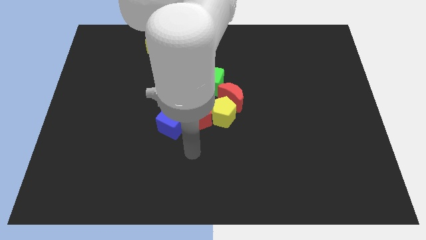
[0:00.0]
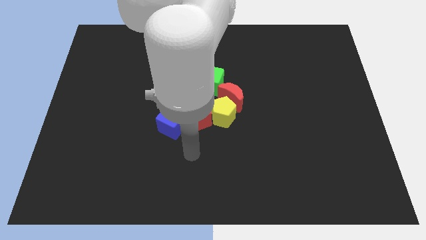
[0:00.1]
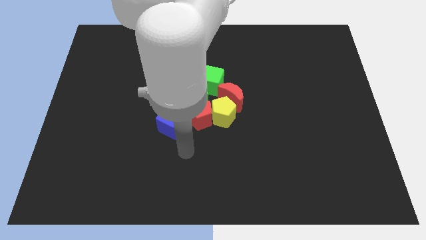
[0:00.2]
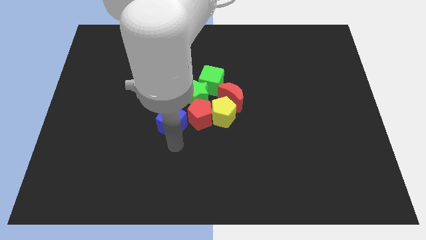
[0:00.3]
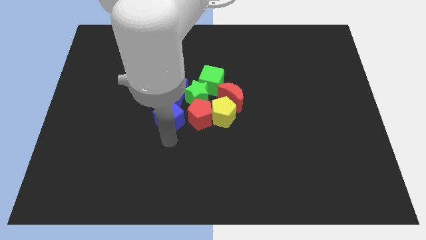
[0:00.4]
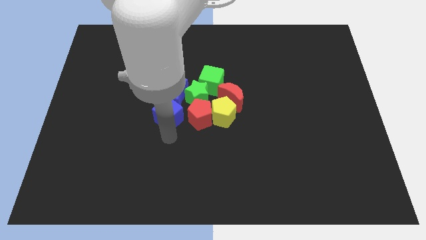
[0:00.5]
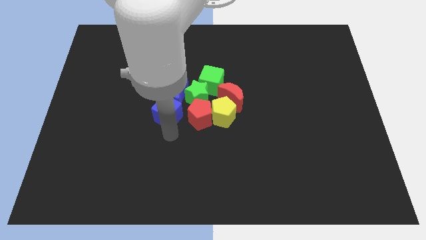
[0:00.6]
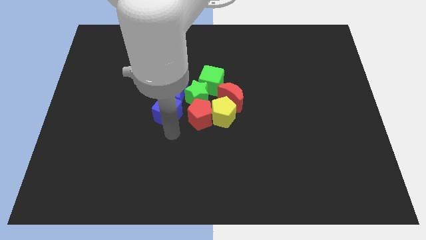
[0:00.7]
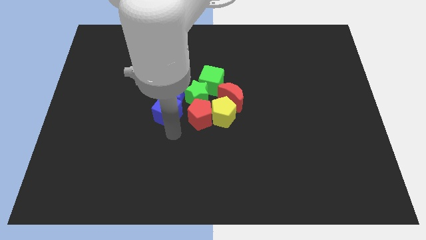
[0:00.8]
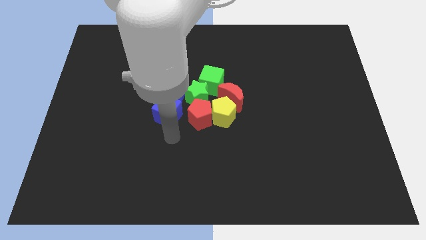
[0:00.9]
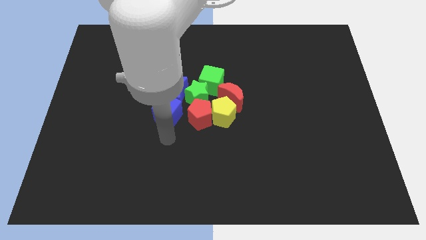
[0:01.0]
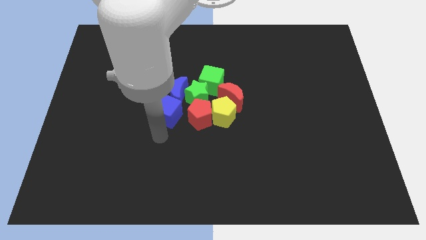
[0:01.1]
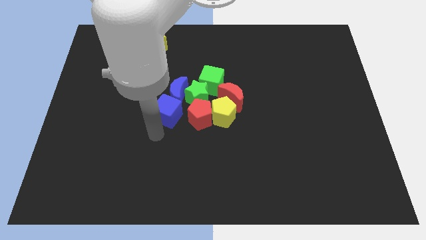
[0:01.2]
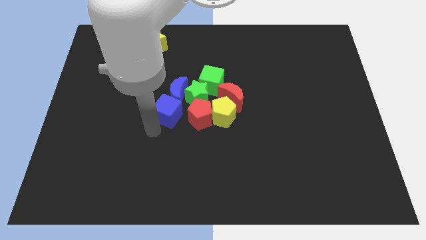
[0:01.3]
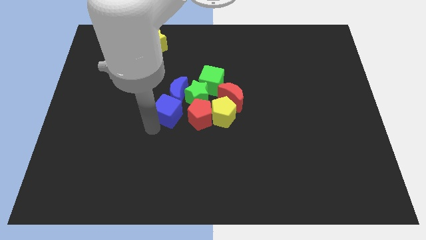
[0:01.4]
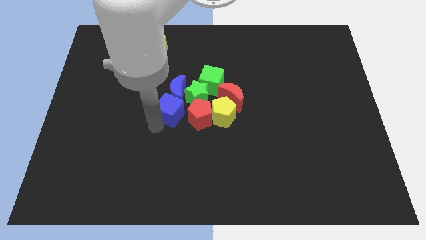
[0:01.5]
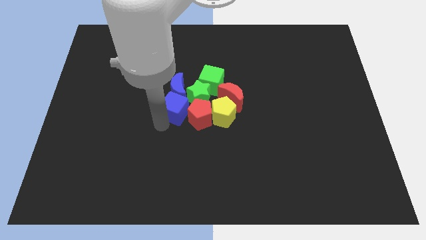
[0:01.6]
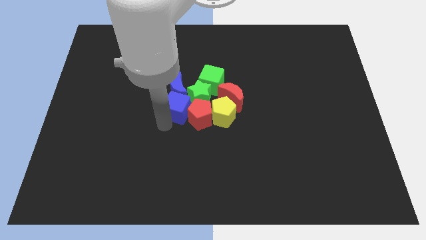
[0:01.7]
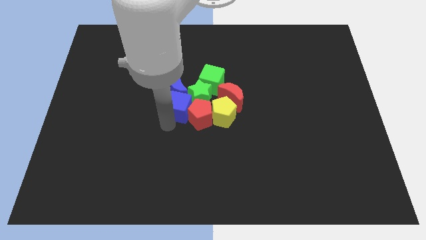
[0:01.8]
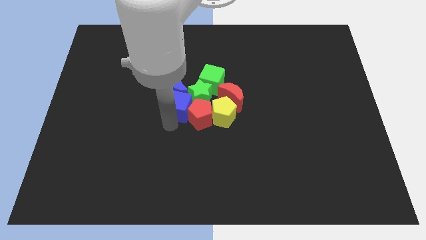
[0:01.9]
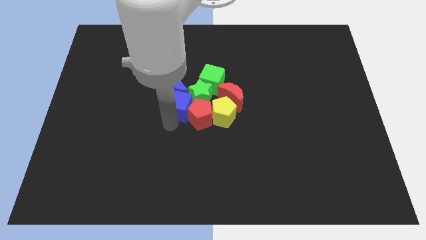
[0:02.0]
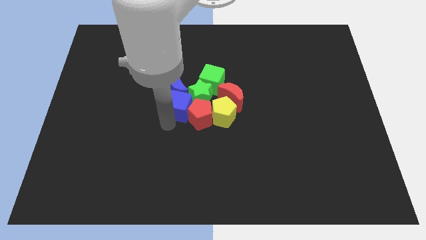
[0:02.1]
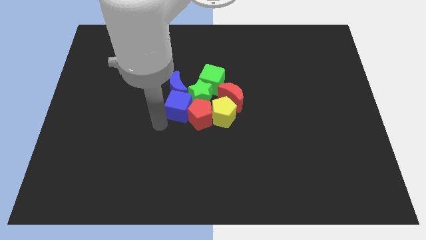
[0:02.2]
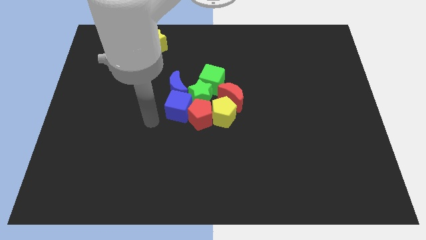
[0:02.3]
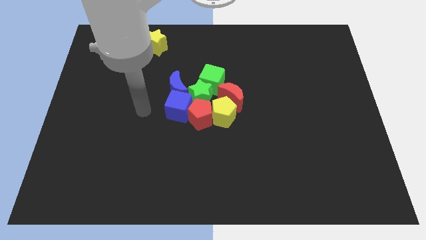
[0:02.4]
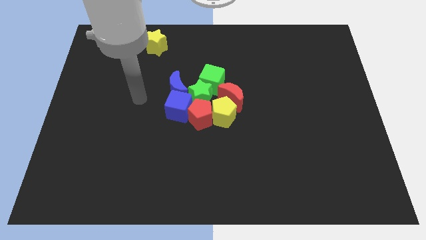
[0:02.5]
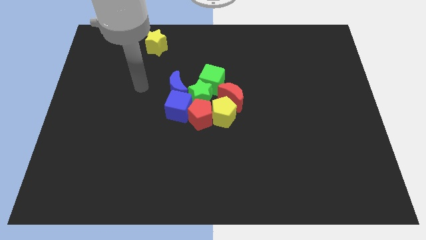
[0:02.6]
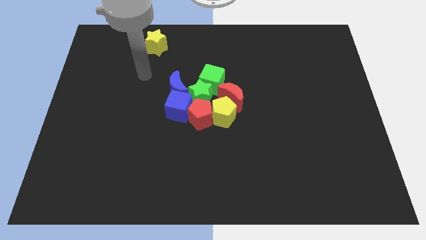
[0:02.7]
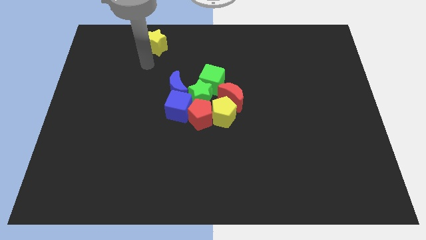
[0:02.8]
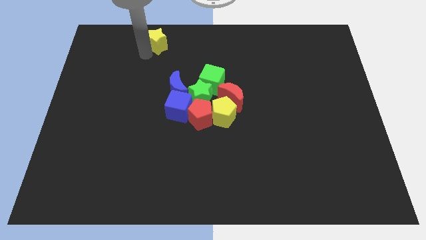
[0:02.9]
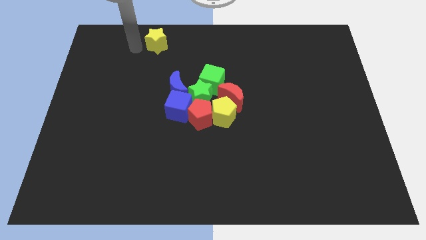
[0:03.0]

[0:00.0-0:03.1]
move the blue cube below the blue moon

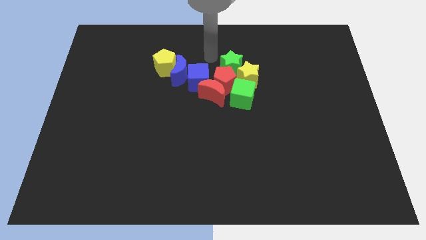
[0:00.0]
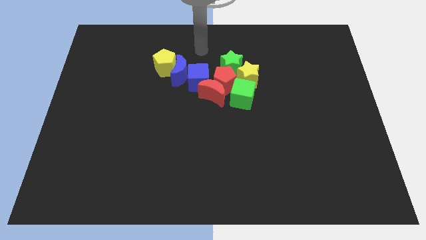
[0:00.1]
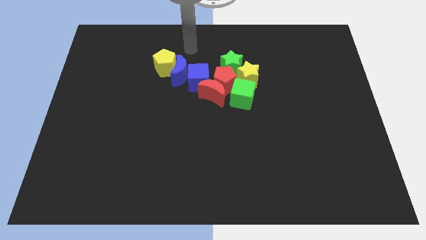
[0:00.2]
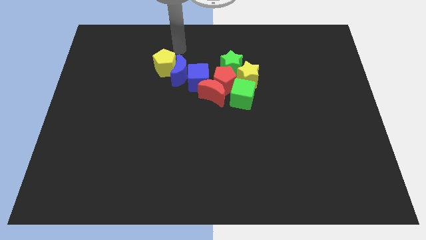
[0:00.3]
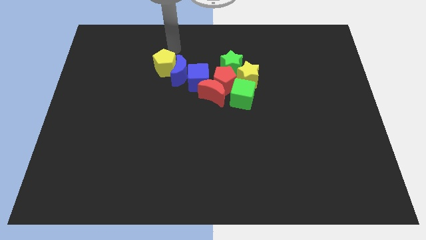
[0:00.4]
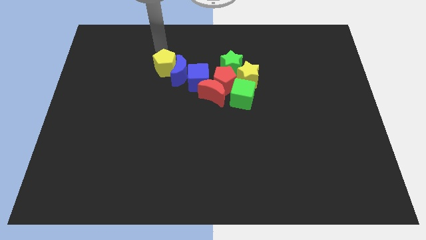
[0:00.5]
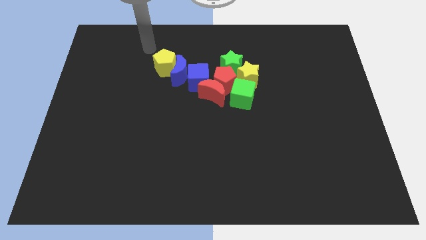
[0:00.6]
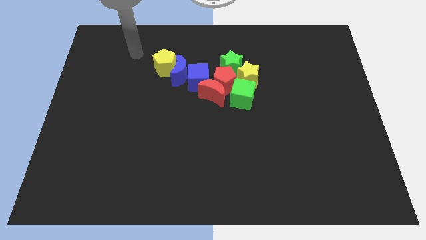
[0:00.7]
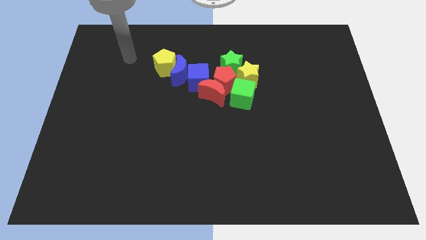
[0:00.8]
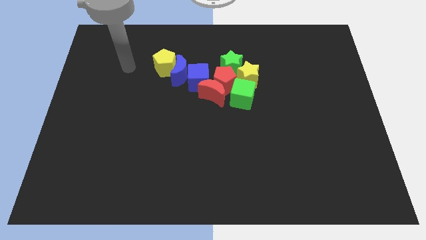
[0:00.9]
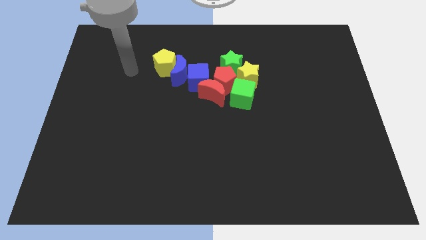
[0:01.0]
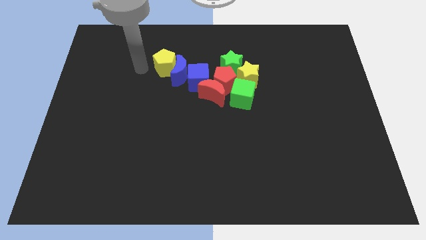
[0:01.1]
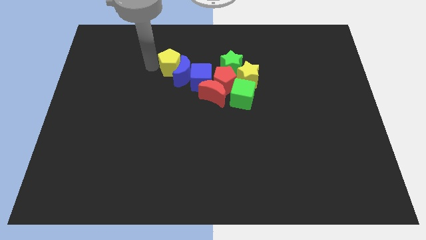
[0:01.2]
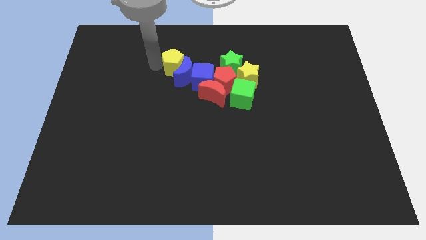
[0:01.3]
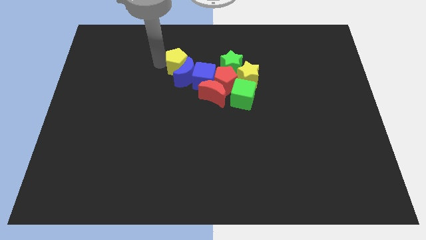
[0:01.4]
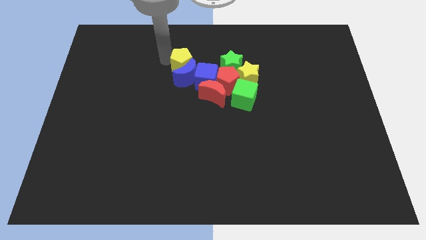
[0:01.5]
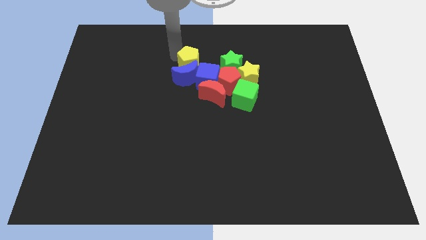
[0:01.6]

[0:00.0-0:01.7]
slightly push the yellow pentagon into blue moon

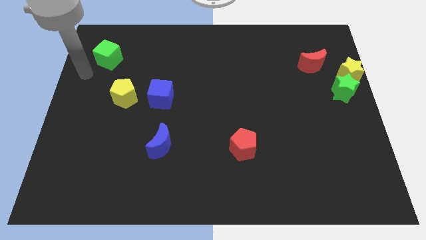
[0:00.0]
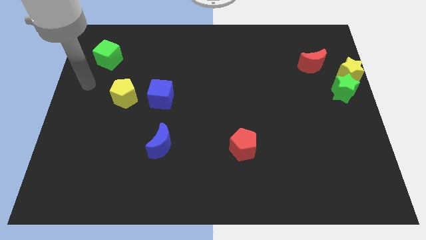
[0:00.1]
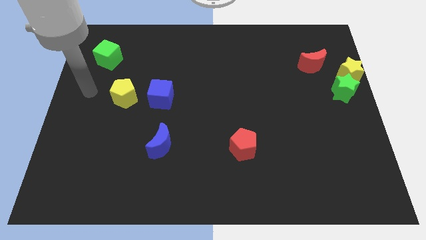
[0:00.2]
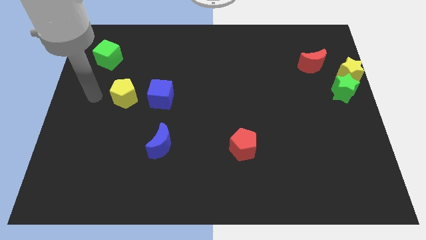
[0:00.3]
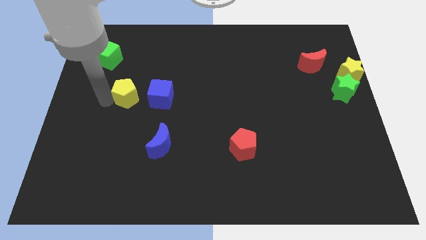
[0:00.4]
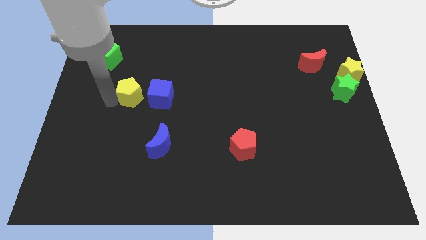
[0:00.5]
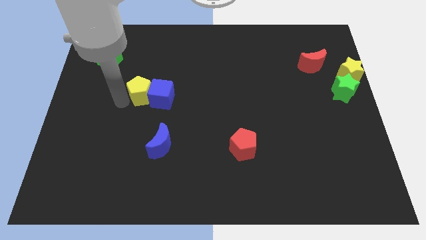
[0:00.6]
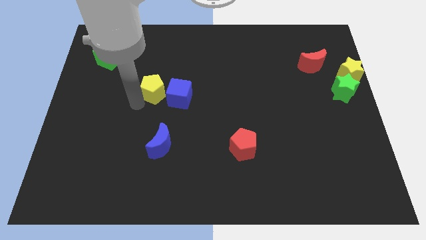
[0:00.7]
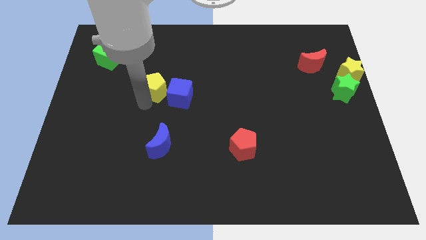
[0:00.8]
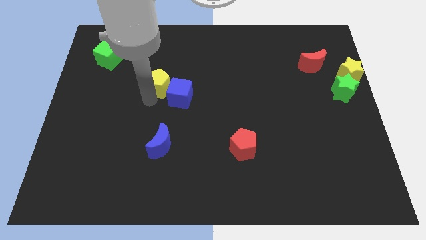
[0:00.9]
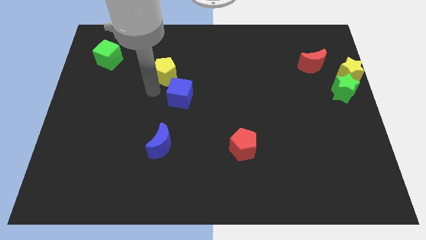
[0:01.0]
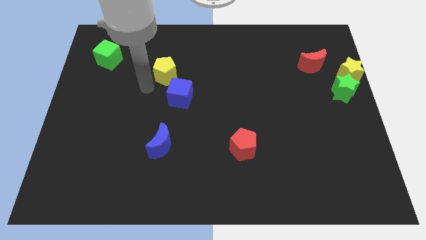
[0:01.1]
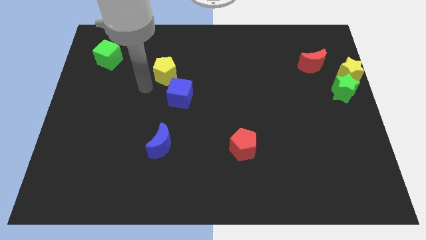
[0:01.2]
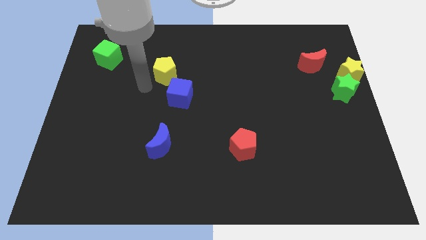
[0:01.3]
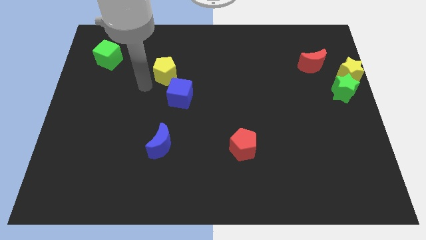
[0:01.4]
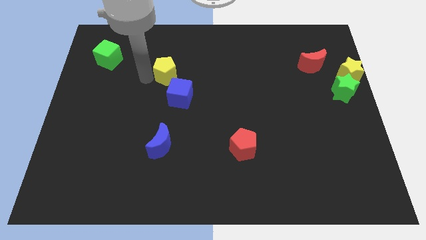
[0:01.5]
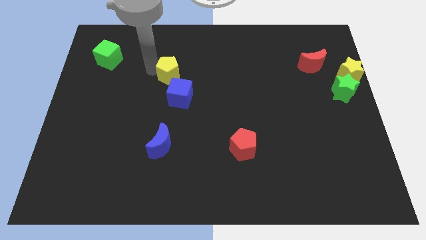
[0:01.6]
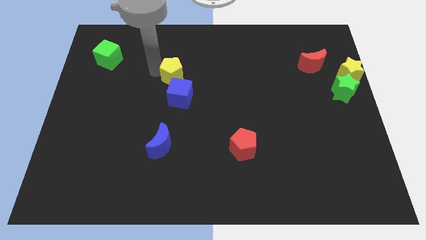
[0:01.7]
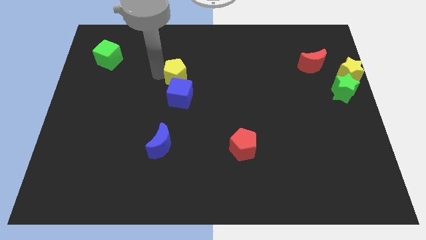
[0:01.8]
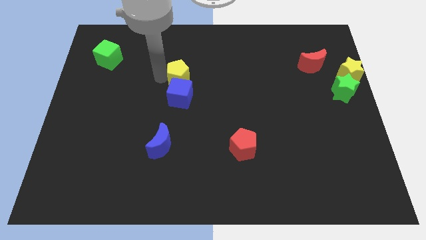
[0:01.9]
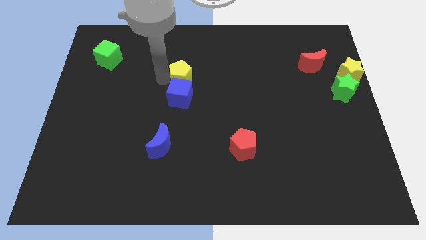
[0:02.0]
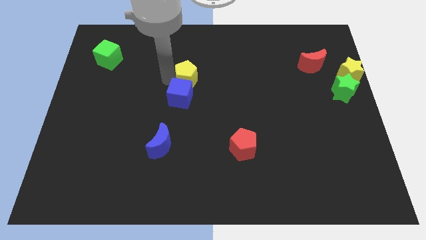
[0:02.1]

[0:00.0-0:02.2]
slide yellow pentagon into blue cube

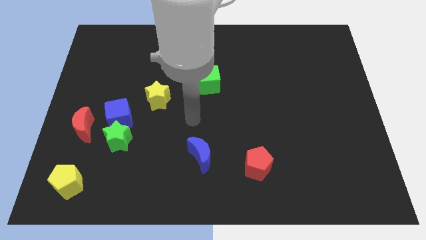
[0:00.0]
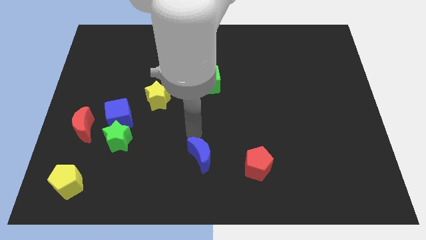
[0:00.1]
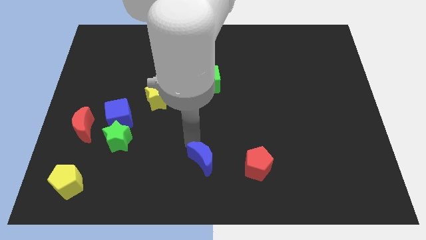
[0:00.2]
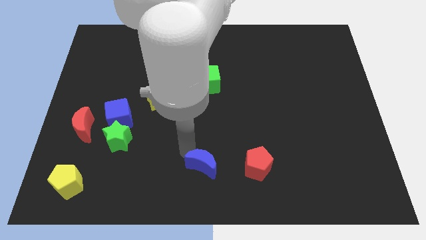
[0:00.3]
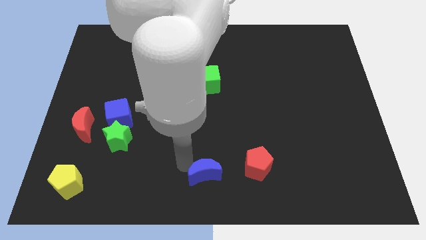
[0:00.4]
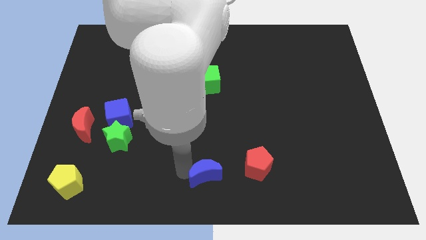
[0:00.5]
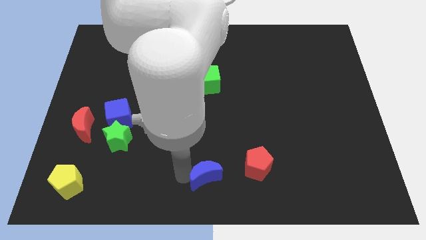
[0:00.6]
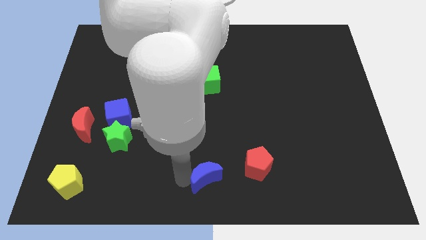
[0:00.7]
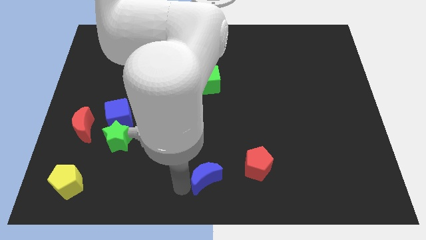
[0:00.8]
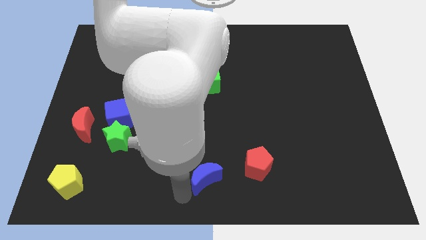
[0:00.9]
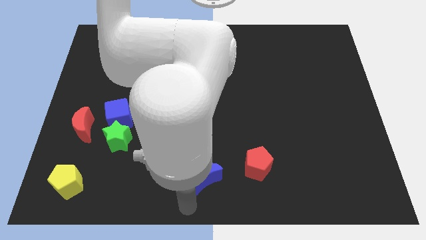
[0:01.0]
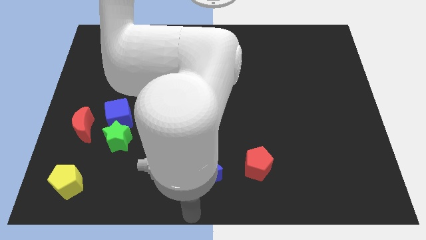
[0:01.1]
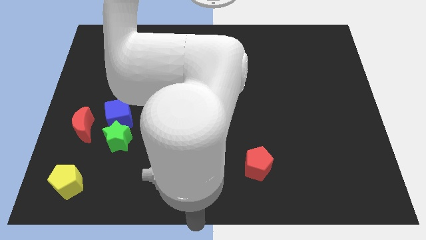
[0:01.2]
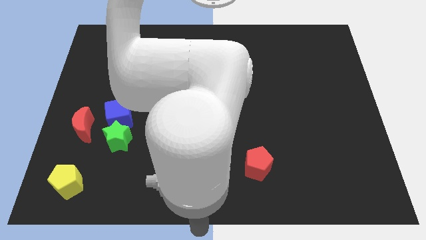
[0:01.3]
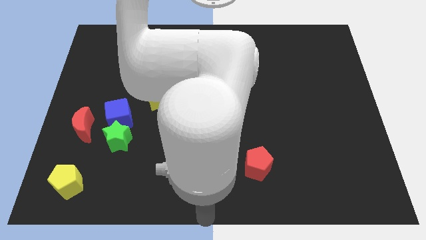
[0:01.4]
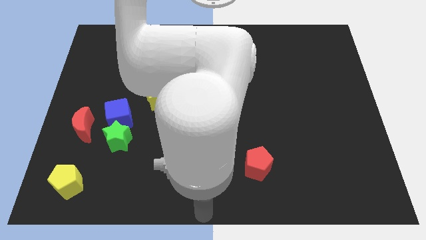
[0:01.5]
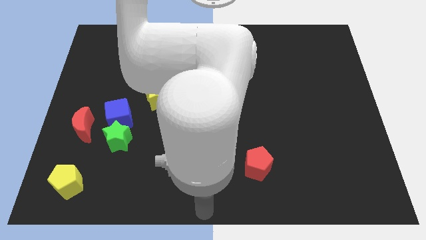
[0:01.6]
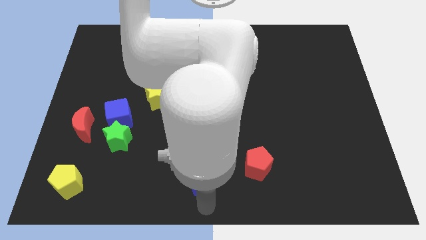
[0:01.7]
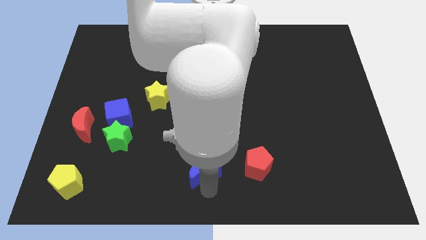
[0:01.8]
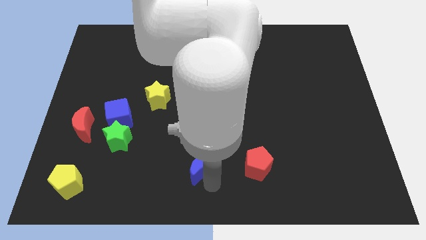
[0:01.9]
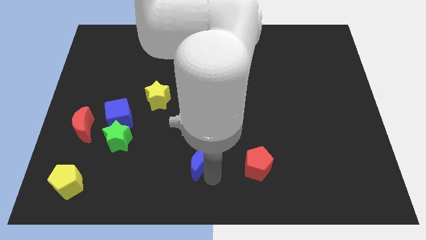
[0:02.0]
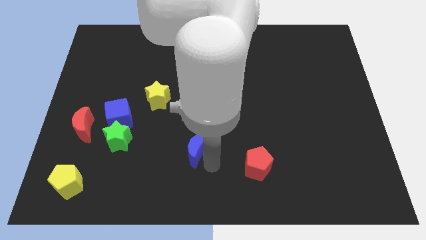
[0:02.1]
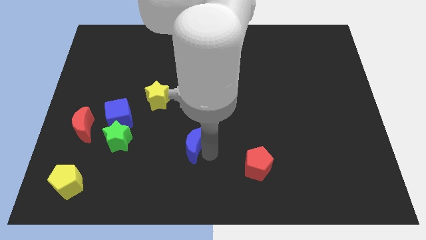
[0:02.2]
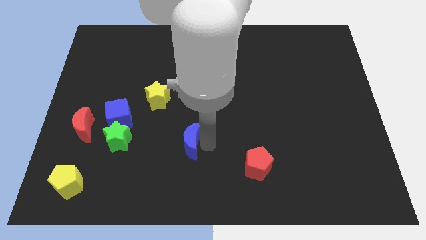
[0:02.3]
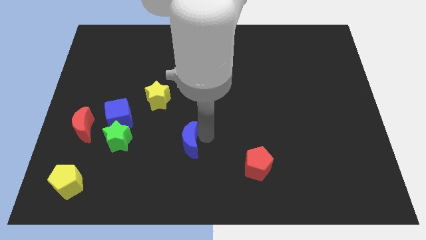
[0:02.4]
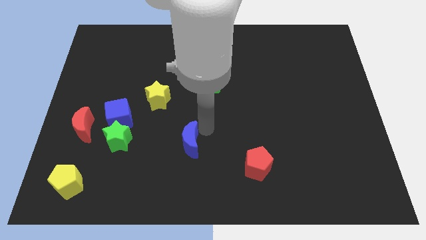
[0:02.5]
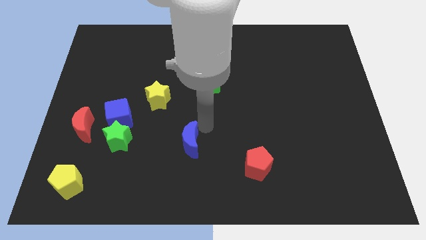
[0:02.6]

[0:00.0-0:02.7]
place the blue moon to the right side of the green star
